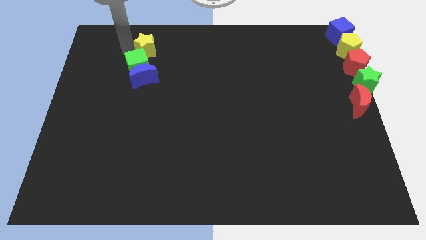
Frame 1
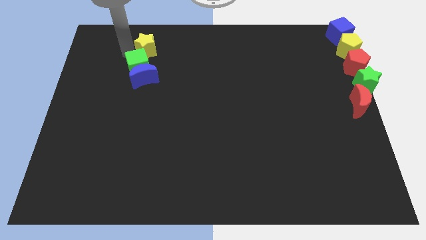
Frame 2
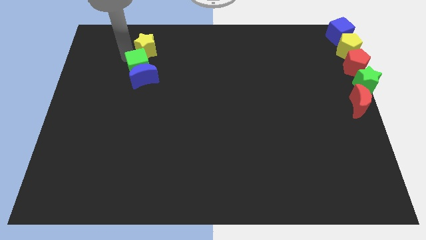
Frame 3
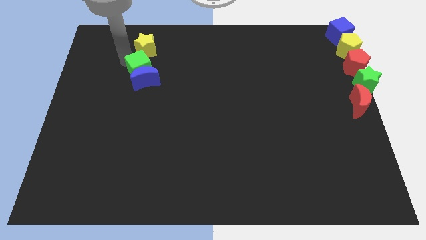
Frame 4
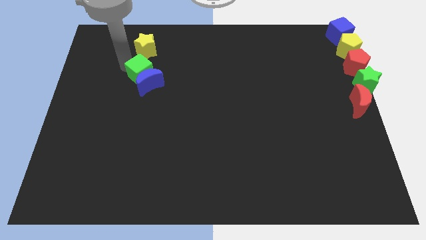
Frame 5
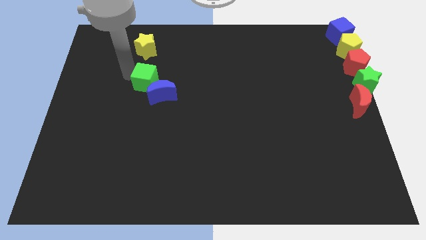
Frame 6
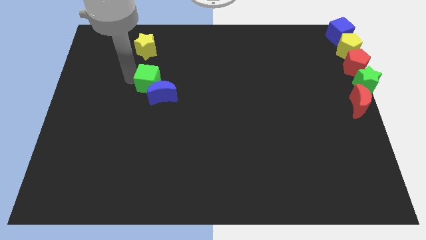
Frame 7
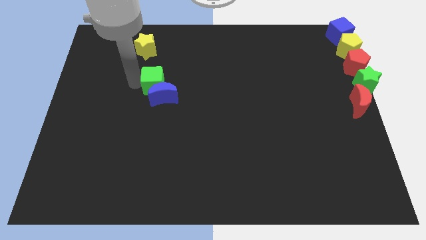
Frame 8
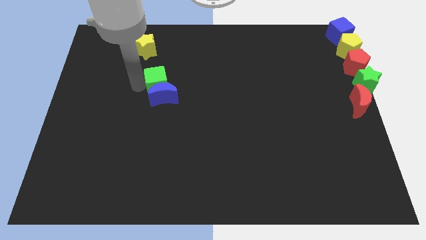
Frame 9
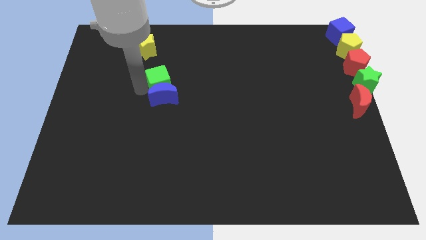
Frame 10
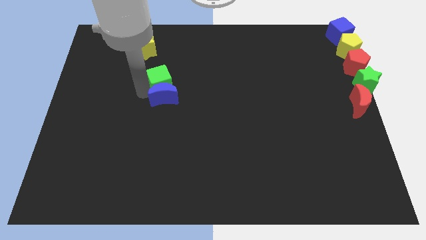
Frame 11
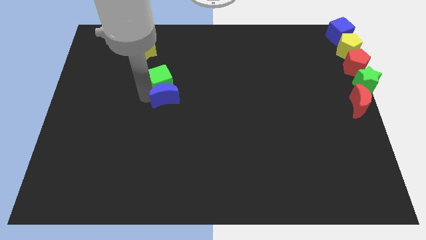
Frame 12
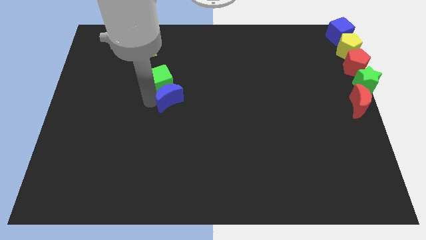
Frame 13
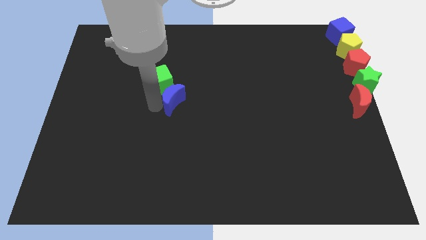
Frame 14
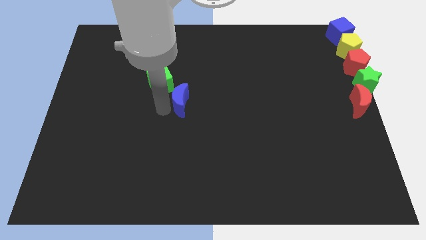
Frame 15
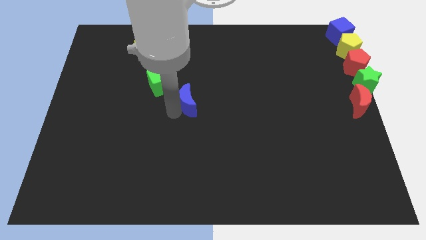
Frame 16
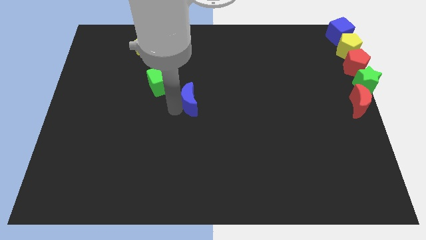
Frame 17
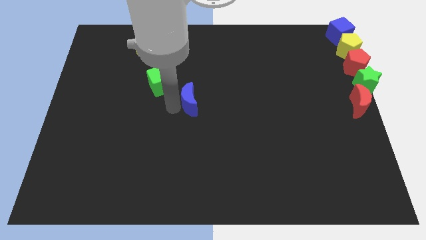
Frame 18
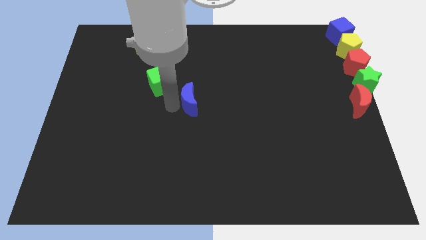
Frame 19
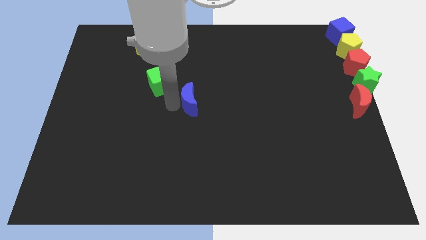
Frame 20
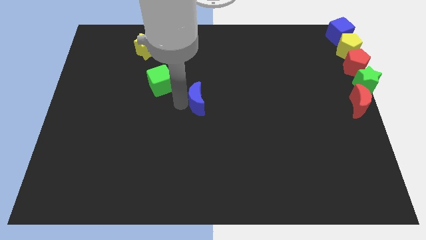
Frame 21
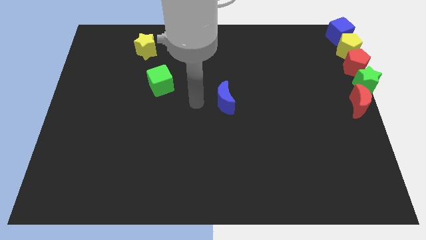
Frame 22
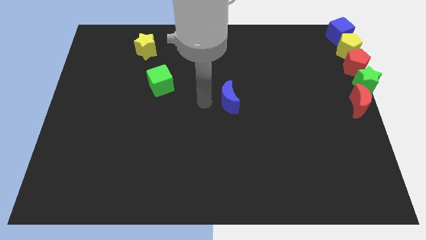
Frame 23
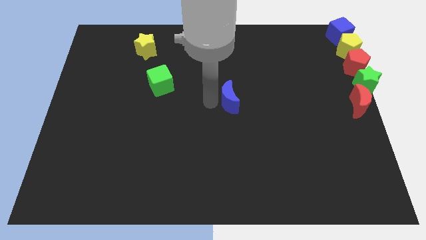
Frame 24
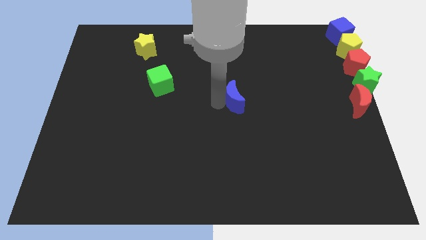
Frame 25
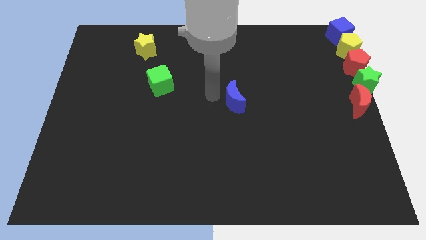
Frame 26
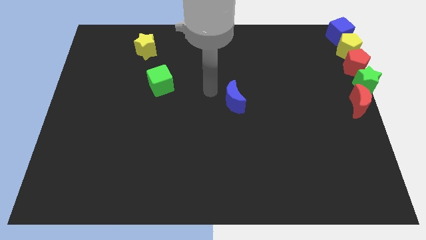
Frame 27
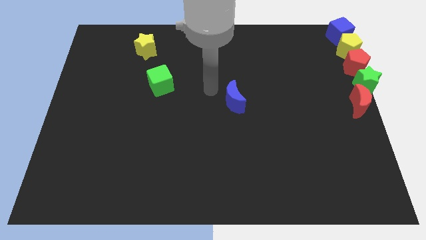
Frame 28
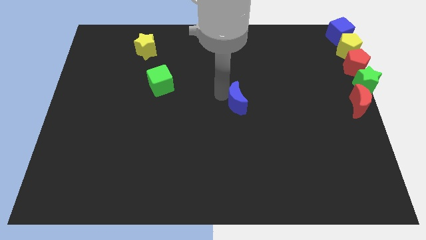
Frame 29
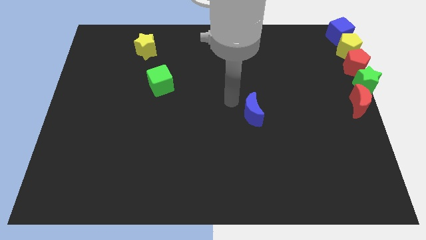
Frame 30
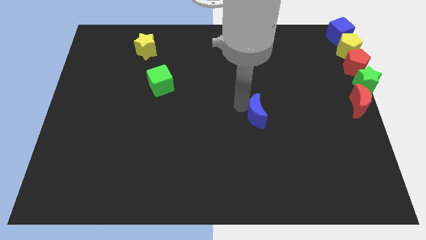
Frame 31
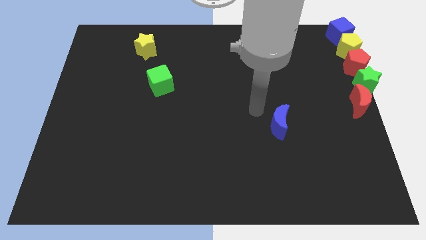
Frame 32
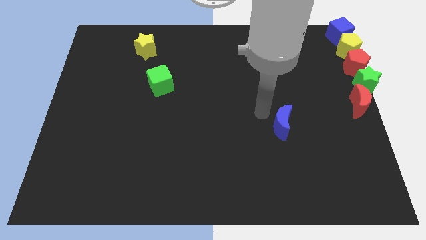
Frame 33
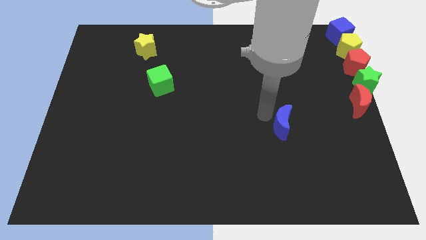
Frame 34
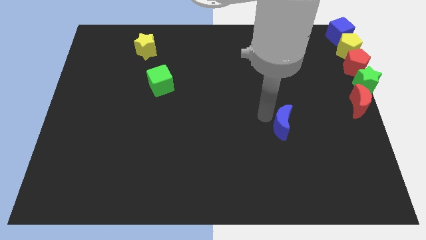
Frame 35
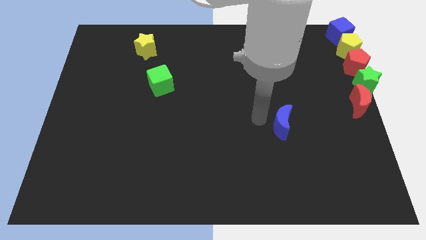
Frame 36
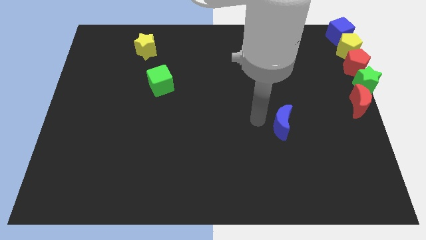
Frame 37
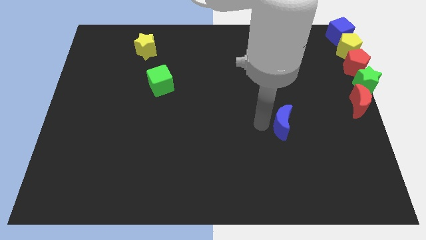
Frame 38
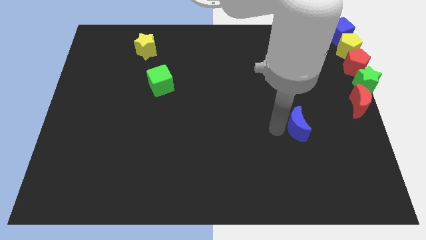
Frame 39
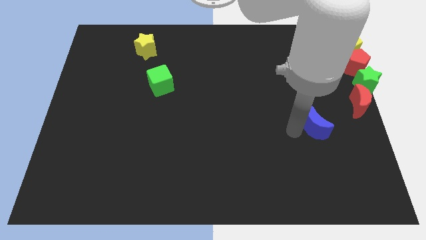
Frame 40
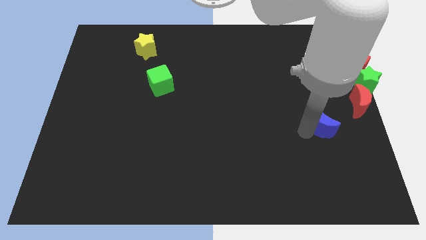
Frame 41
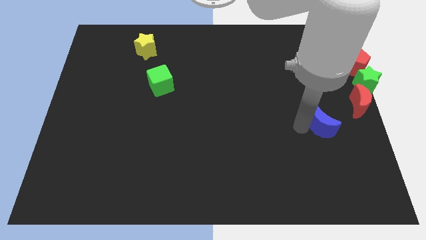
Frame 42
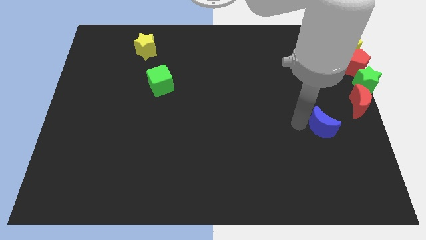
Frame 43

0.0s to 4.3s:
push the green cube and the blue crescent away from each other

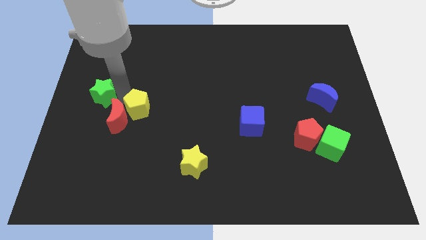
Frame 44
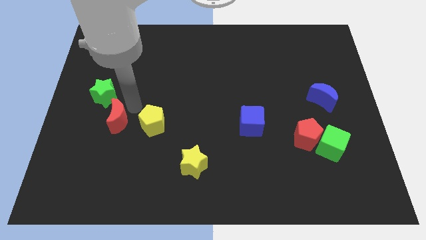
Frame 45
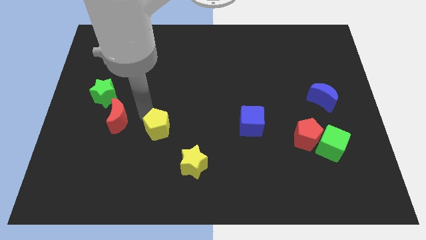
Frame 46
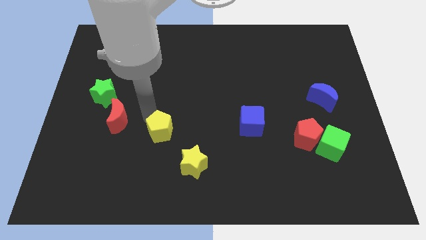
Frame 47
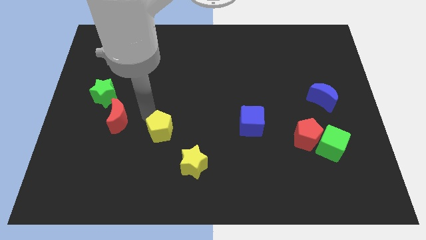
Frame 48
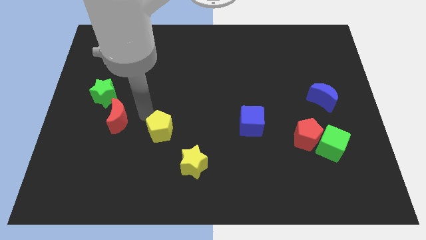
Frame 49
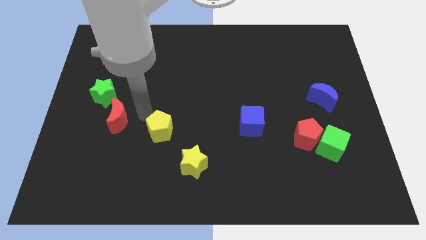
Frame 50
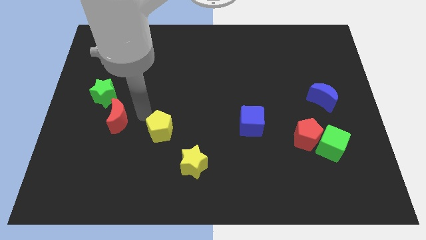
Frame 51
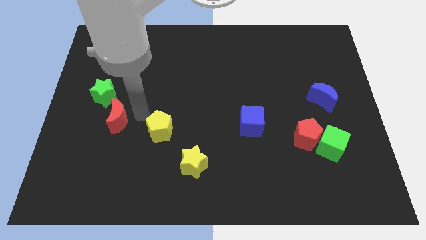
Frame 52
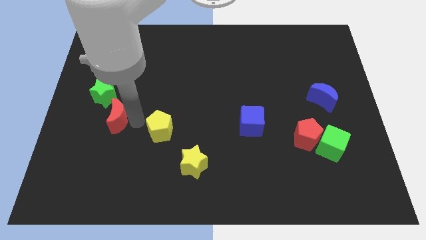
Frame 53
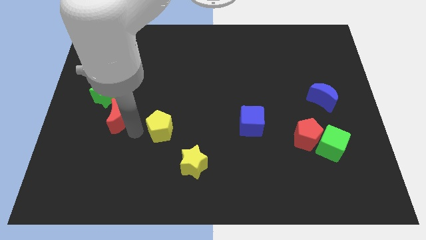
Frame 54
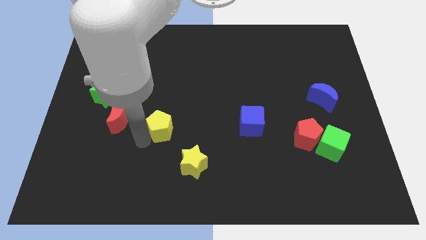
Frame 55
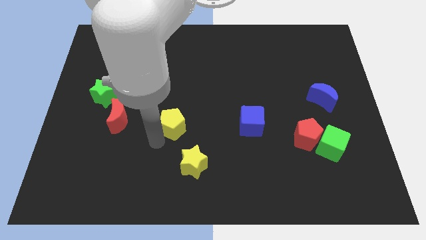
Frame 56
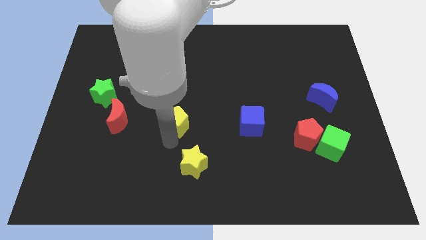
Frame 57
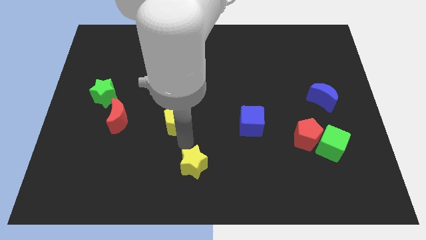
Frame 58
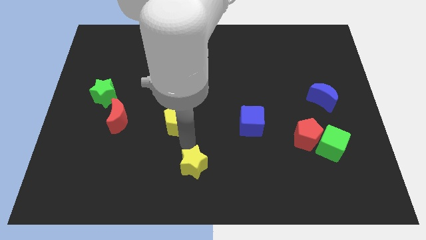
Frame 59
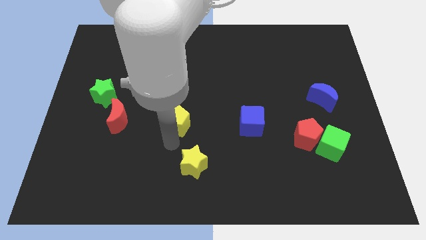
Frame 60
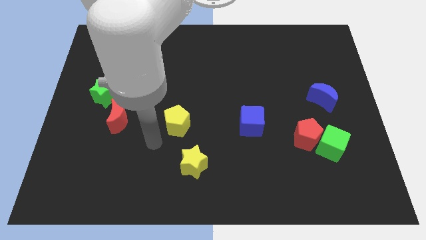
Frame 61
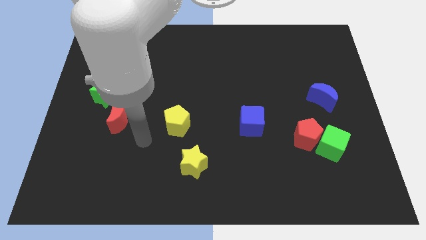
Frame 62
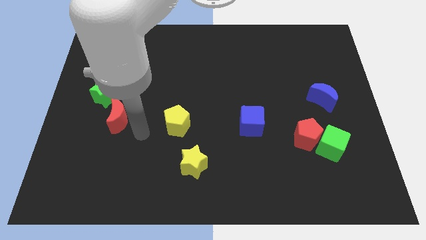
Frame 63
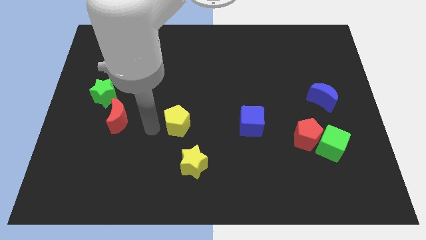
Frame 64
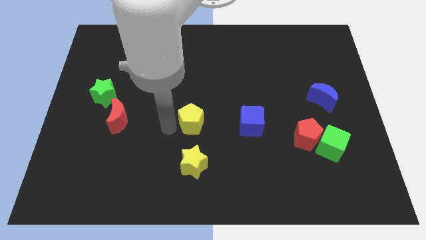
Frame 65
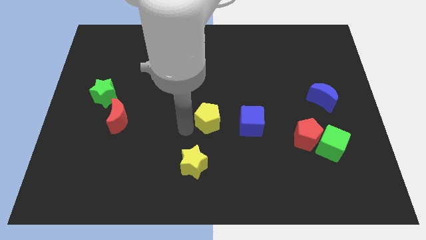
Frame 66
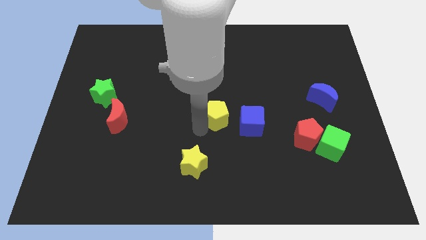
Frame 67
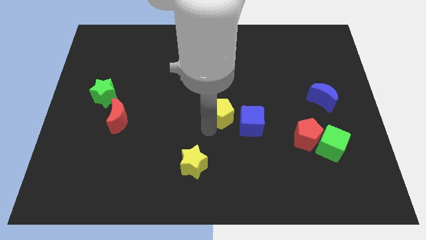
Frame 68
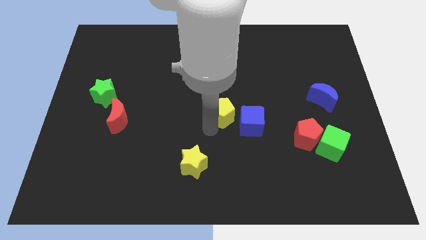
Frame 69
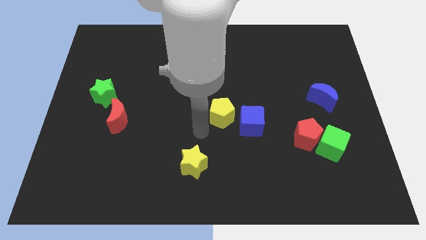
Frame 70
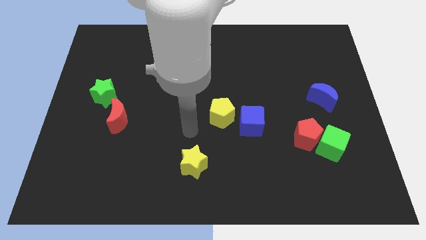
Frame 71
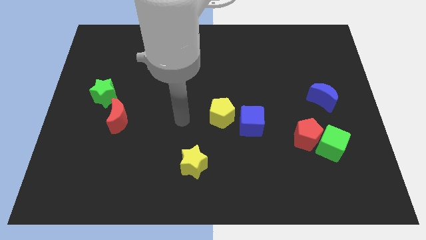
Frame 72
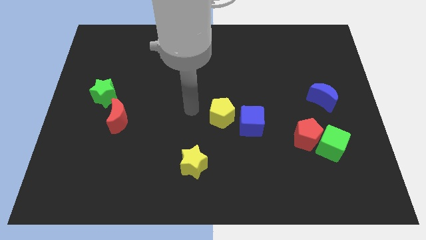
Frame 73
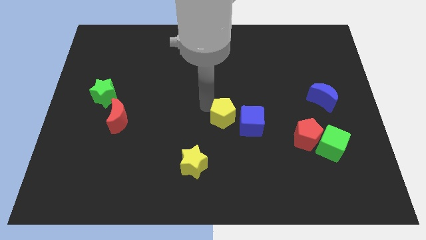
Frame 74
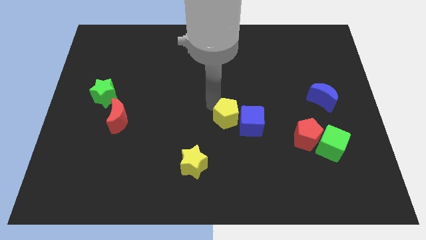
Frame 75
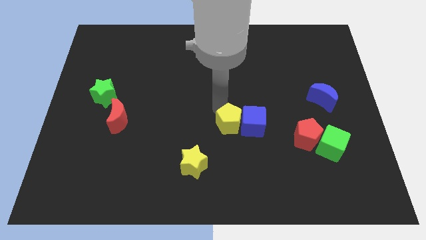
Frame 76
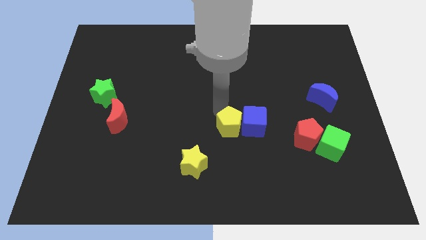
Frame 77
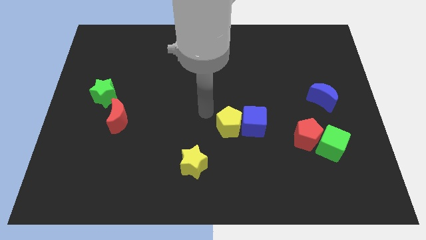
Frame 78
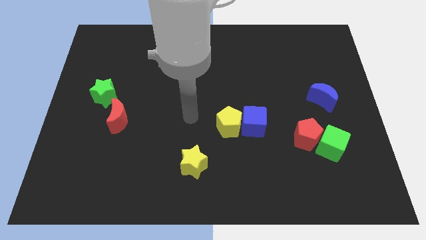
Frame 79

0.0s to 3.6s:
push the yellow pentagon into the blue cube

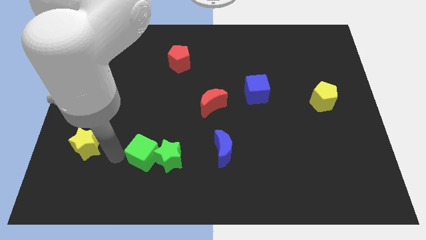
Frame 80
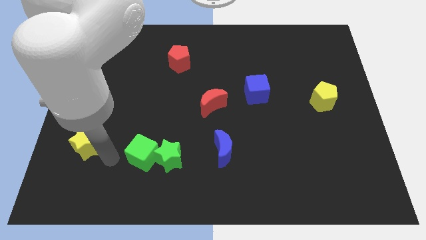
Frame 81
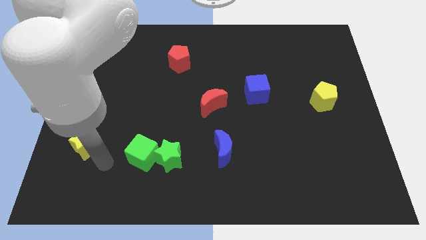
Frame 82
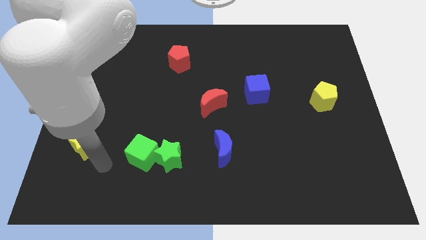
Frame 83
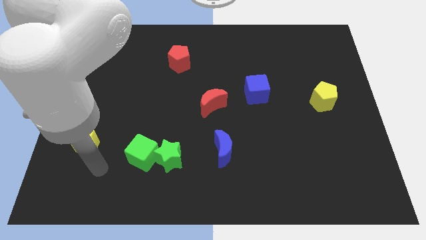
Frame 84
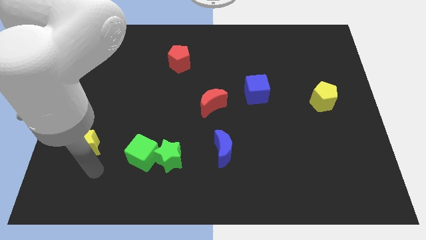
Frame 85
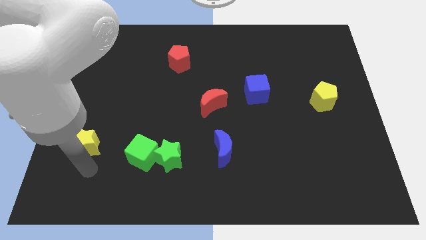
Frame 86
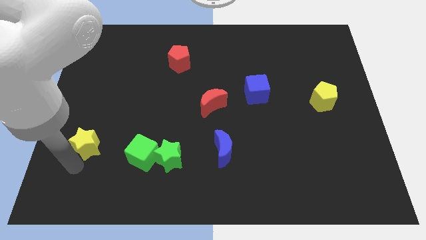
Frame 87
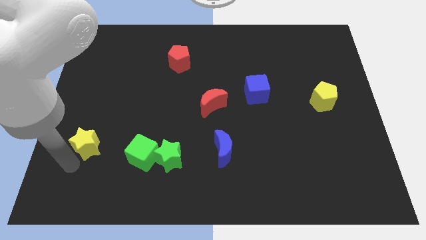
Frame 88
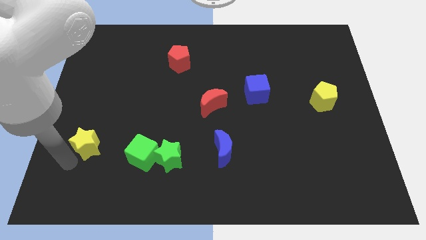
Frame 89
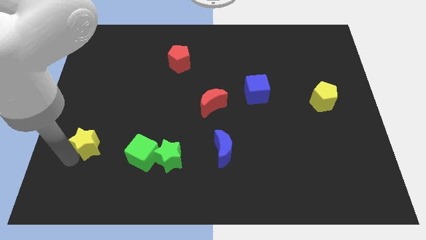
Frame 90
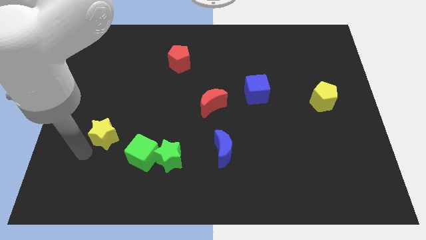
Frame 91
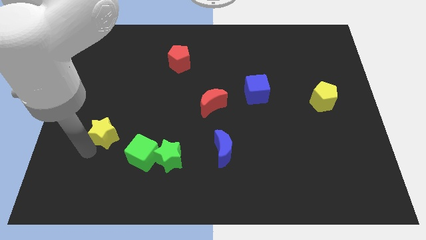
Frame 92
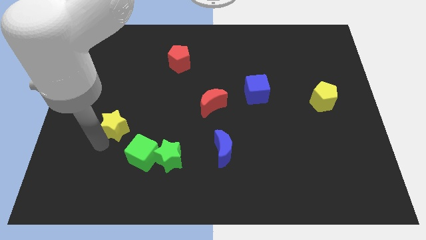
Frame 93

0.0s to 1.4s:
push yellow star slightly upwards
